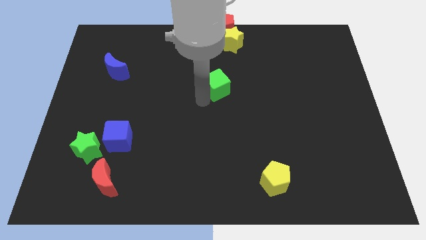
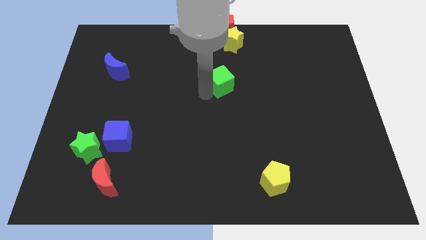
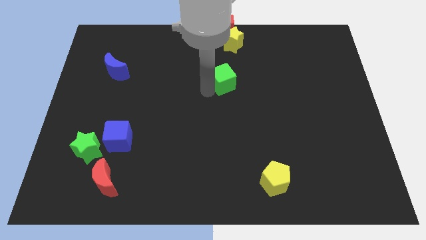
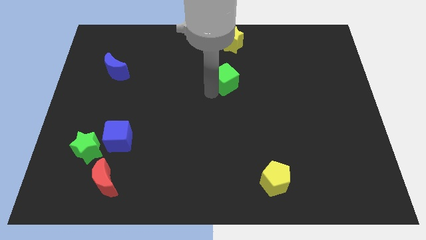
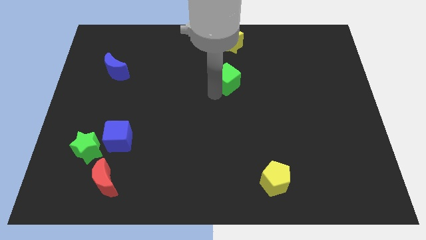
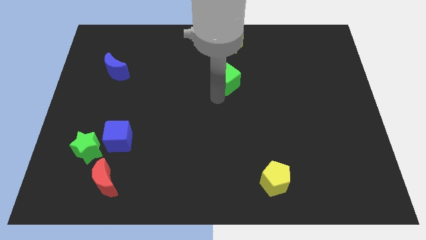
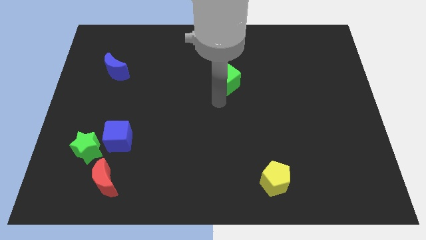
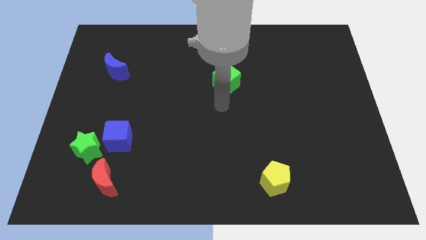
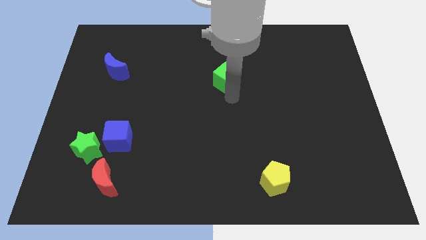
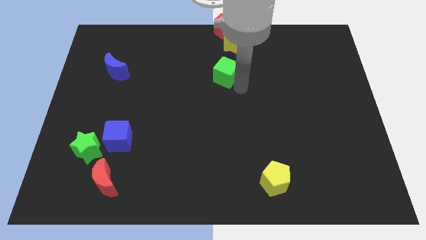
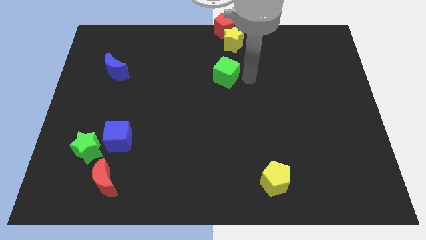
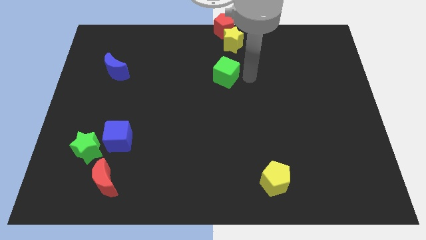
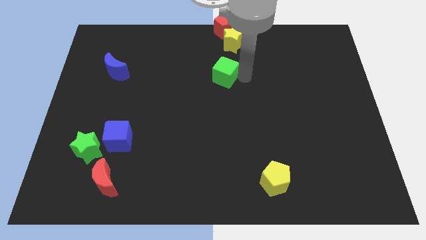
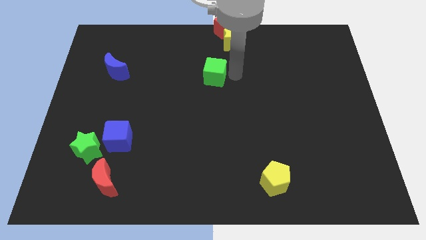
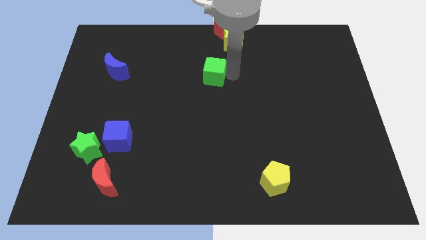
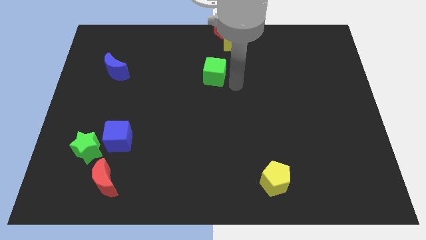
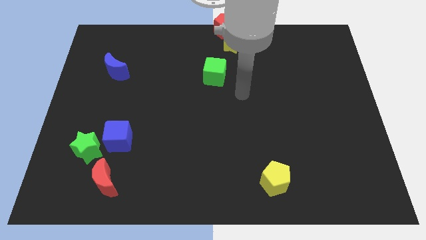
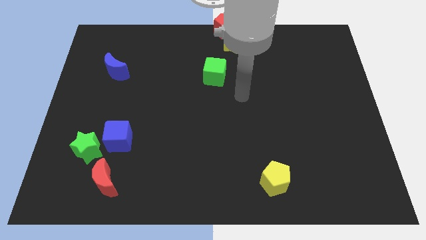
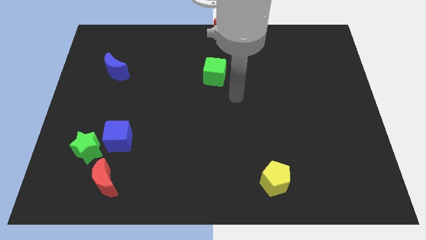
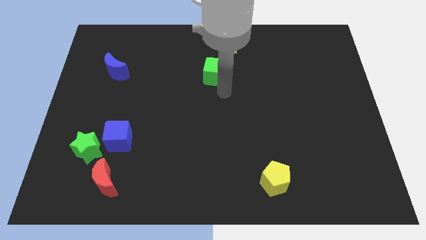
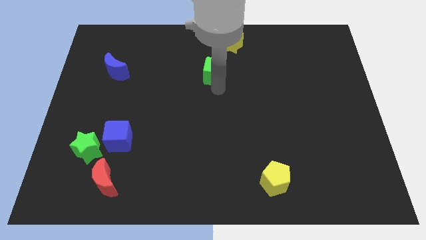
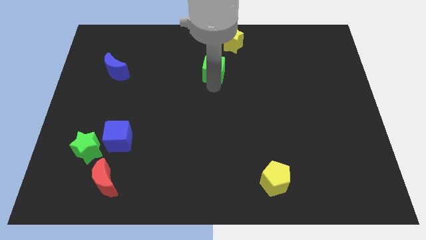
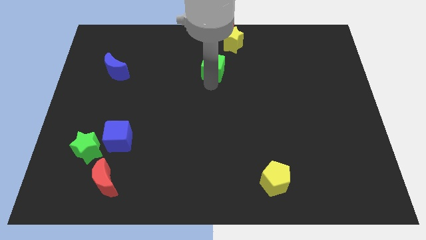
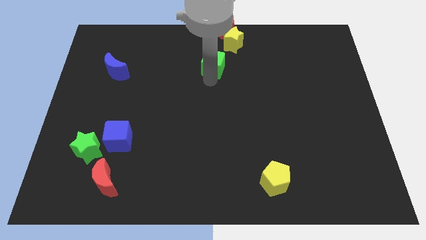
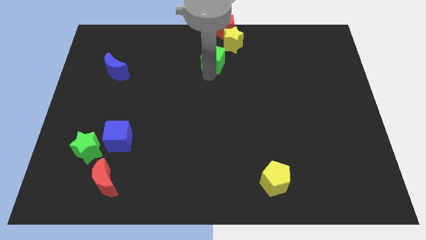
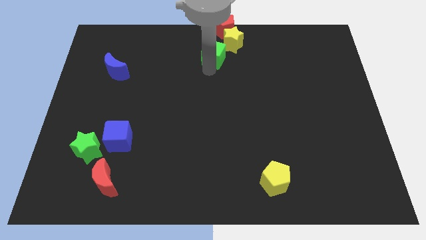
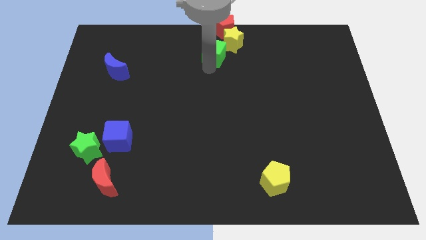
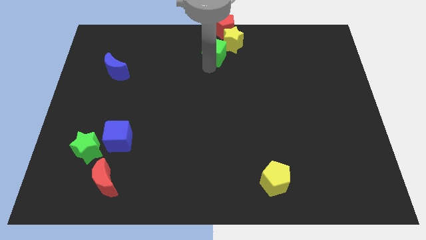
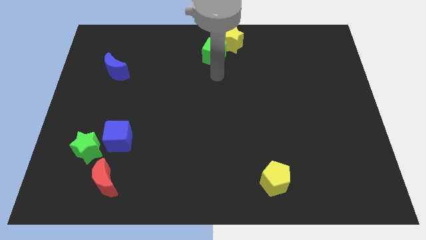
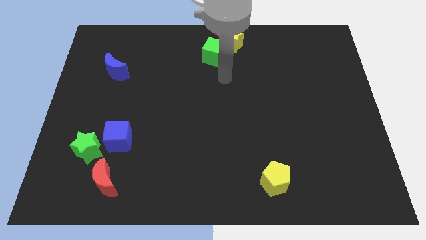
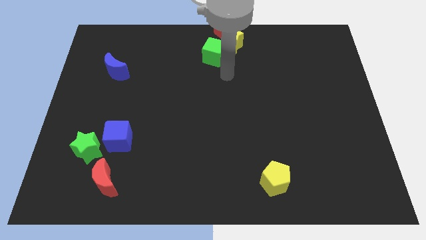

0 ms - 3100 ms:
place the green cube diagonally bottom left to the yellow star

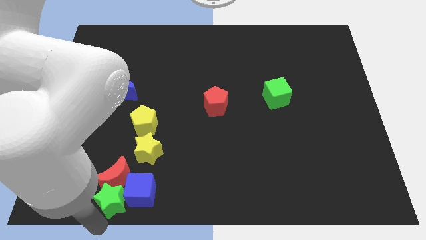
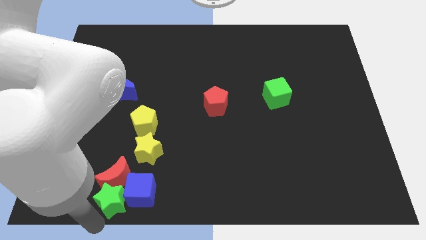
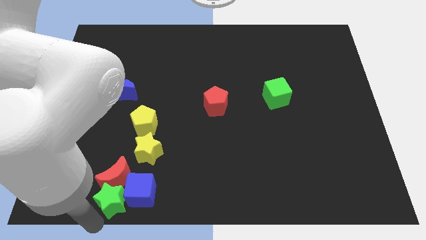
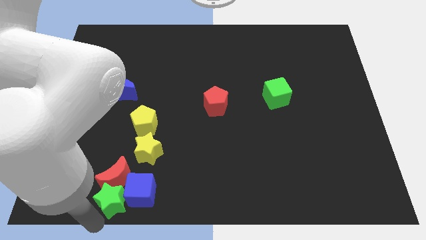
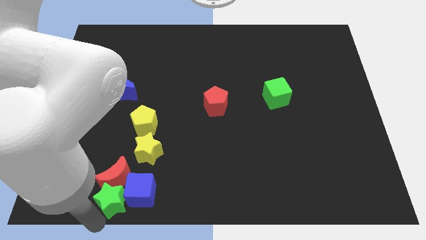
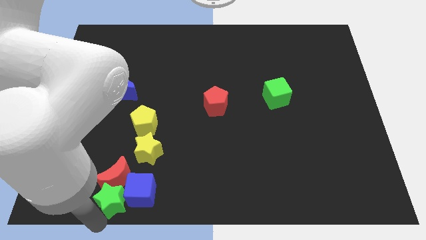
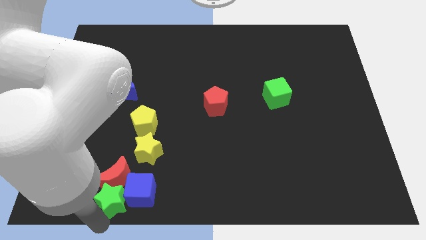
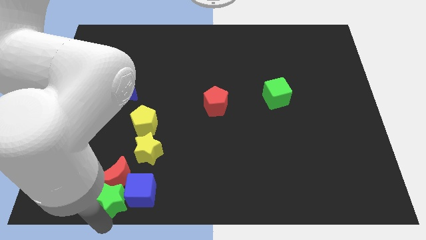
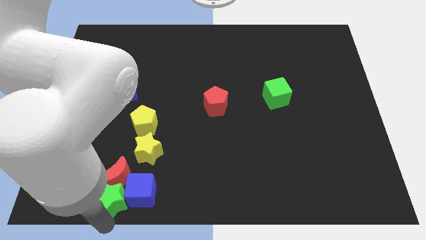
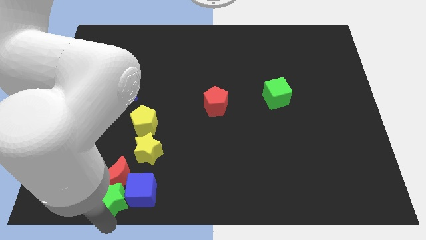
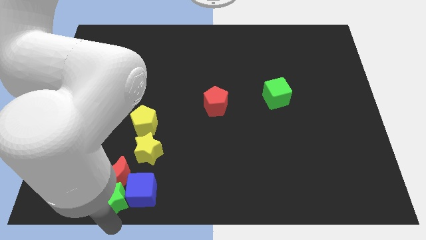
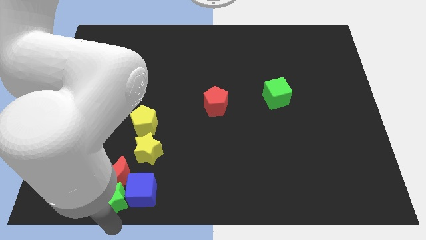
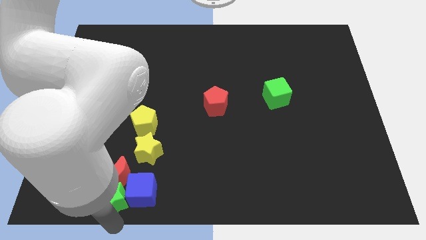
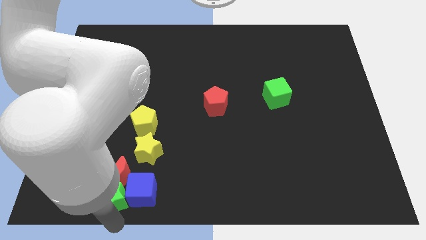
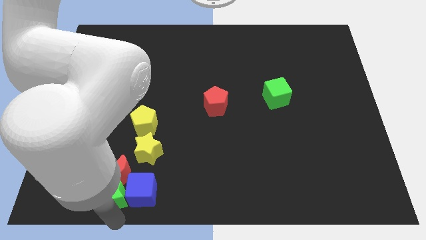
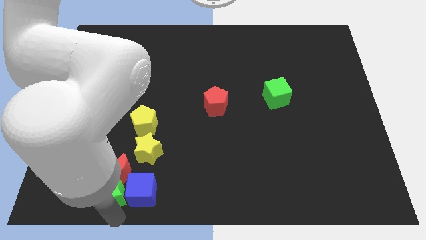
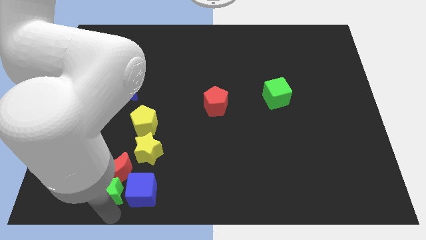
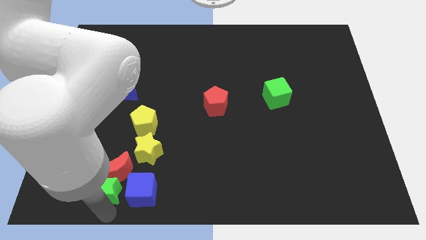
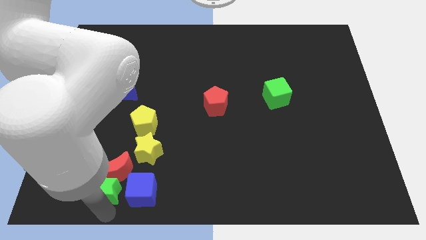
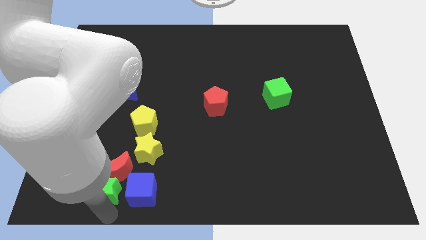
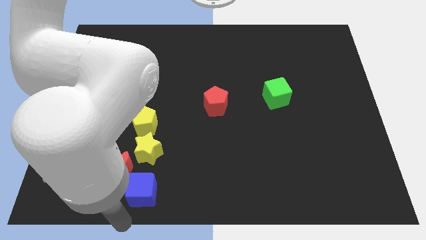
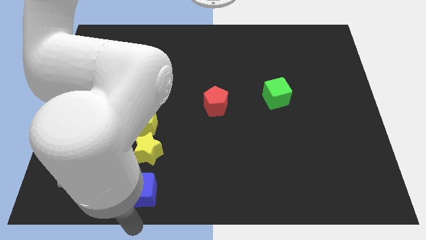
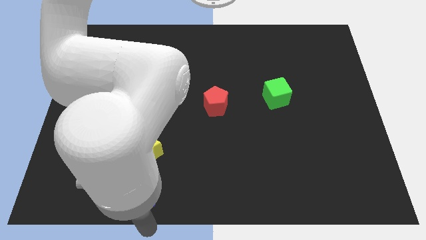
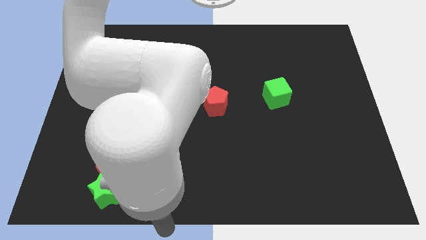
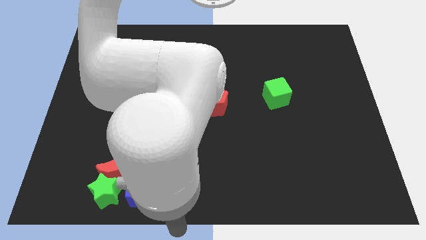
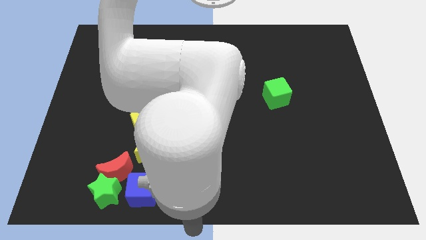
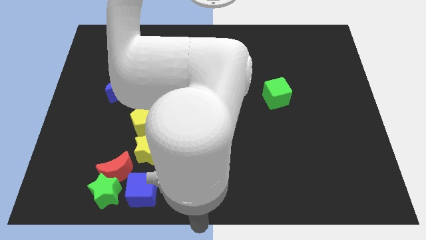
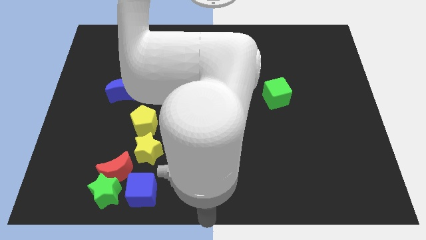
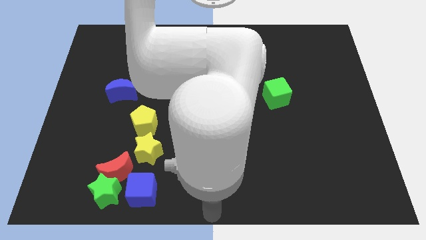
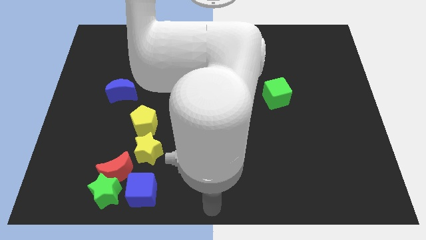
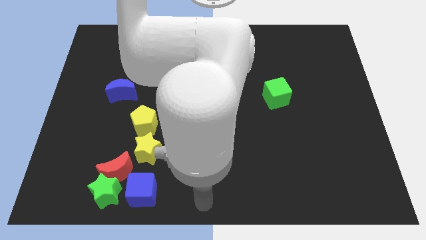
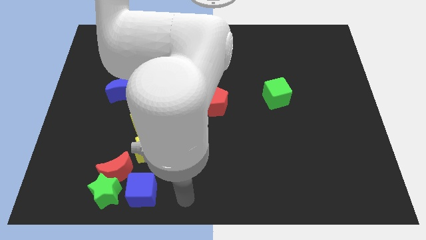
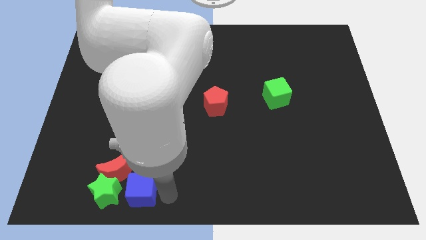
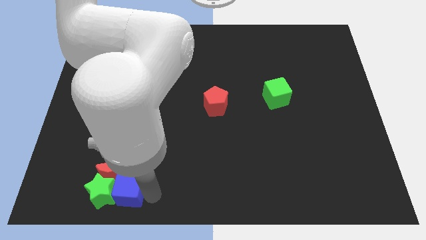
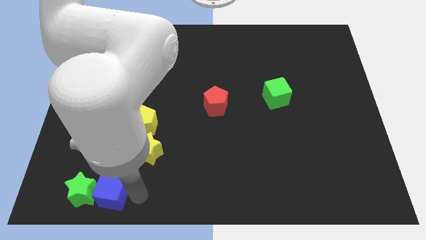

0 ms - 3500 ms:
push blue cube below red crescent

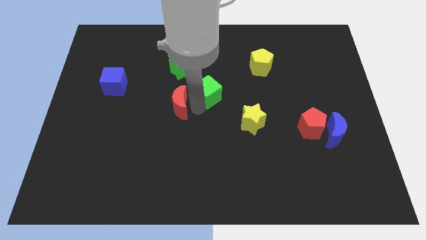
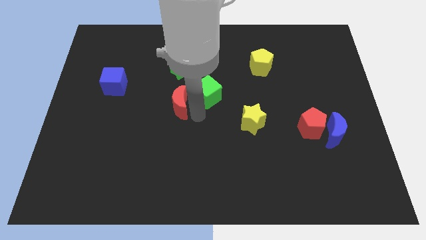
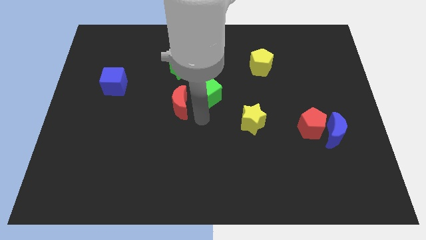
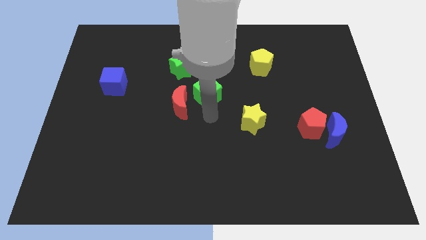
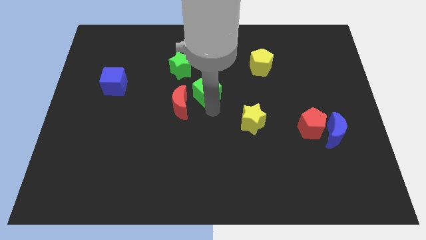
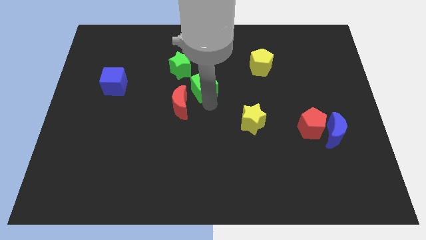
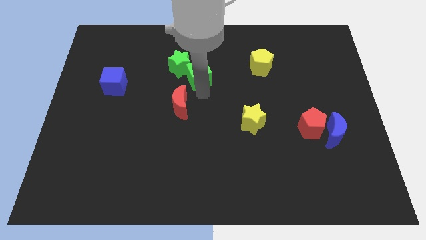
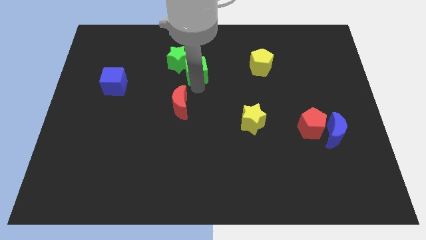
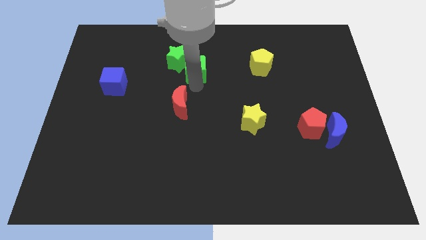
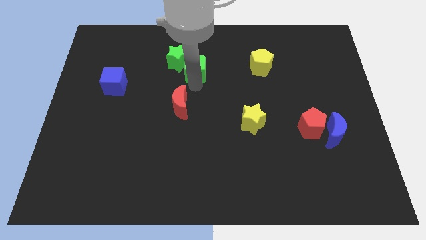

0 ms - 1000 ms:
push the green cube into the green star

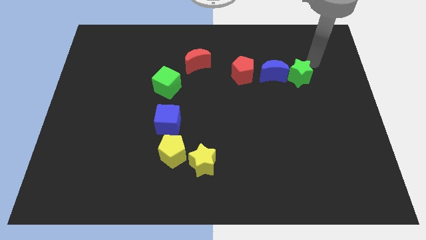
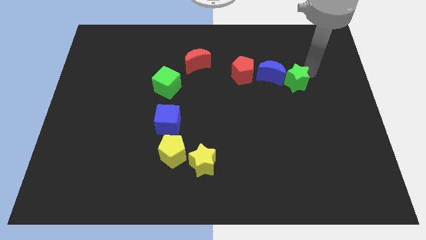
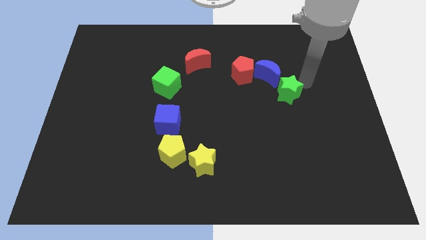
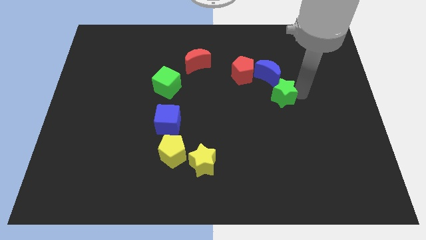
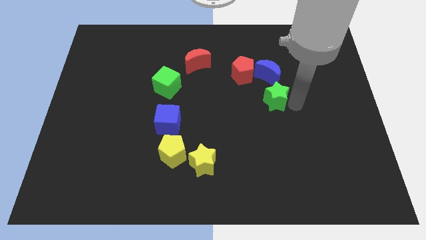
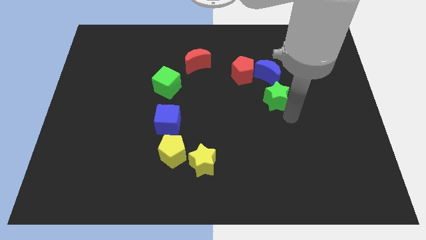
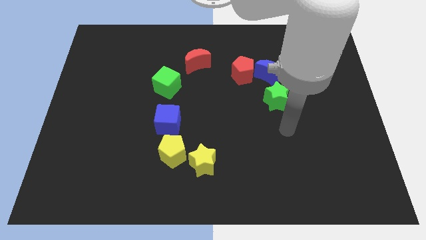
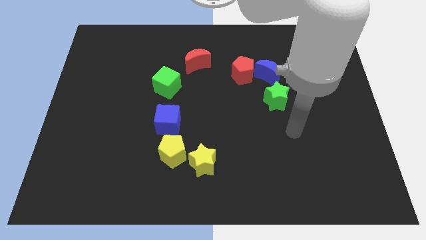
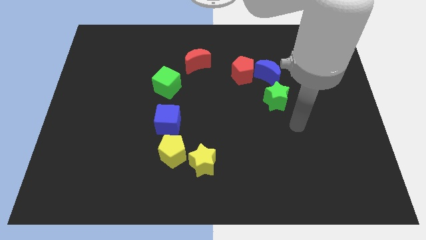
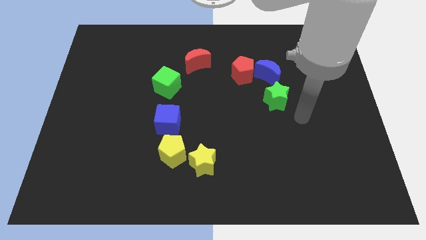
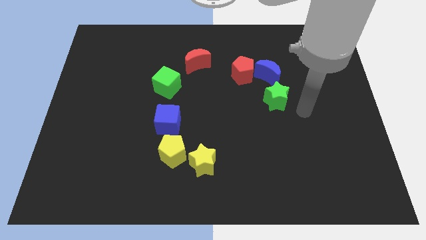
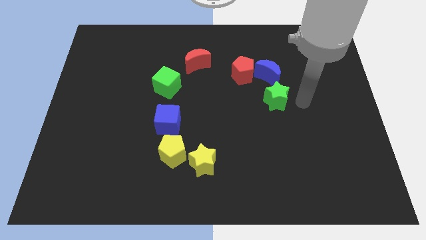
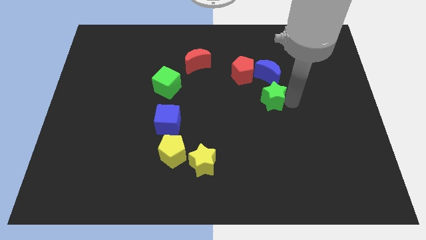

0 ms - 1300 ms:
place the green star below the blue moon
